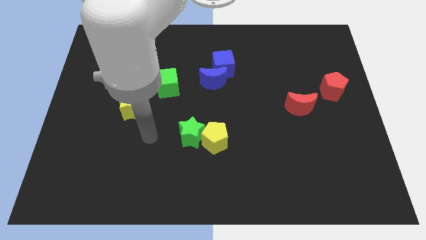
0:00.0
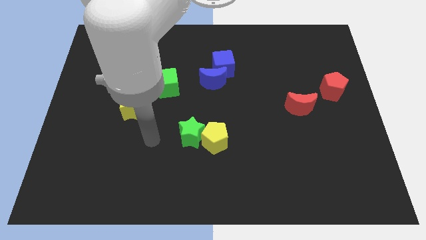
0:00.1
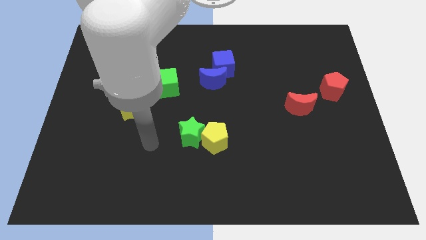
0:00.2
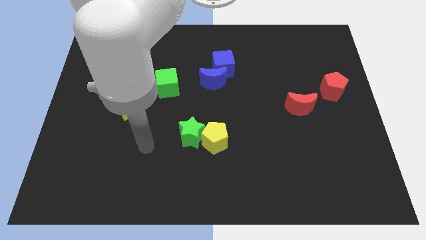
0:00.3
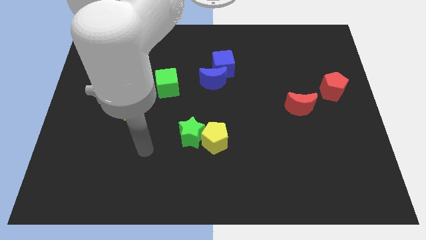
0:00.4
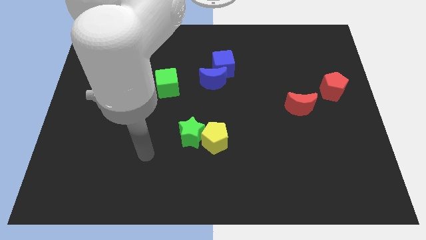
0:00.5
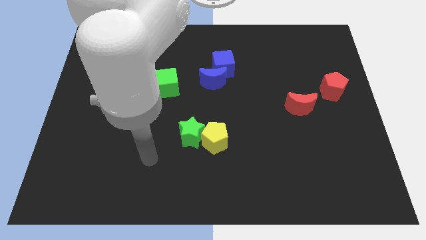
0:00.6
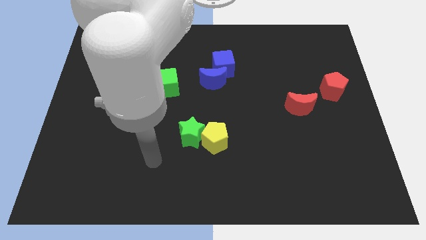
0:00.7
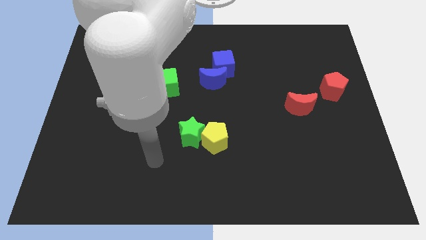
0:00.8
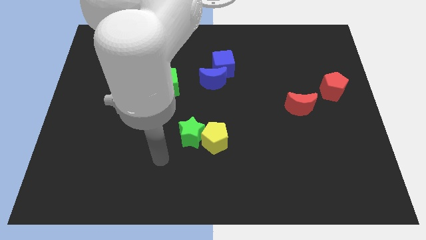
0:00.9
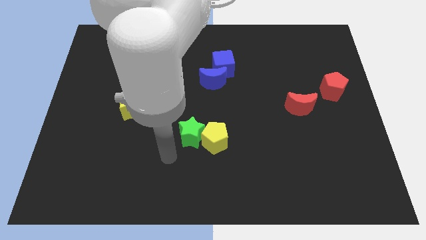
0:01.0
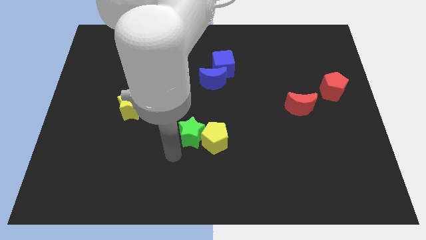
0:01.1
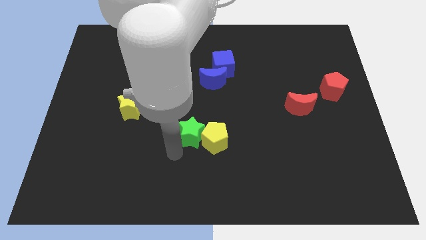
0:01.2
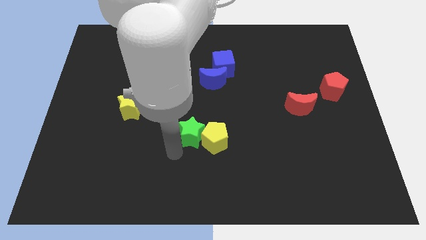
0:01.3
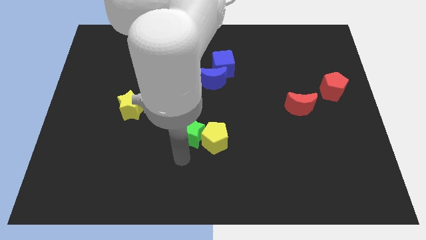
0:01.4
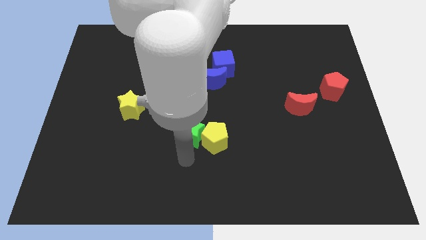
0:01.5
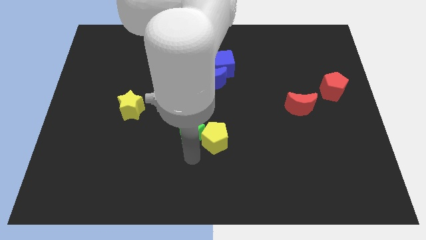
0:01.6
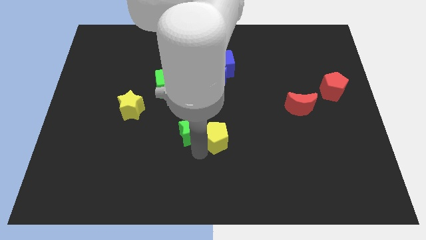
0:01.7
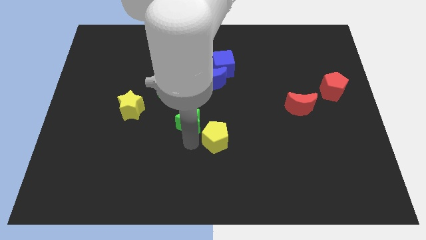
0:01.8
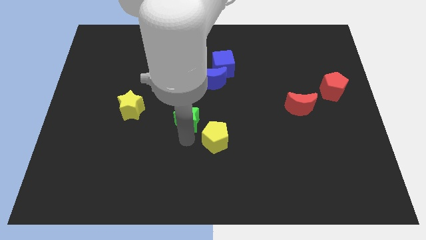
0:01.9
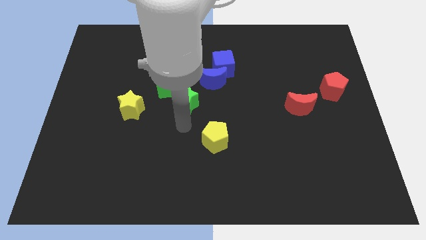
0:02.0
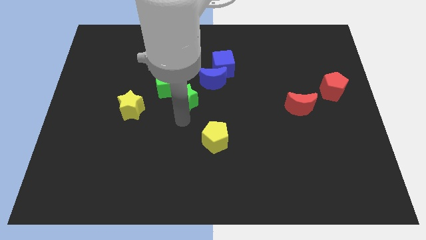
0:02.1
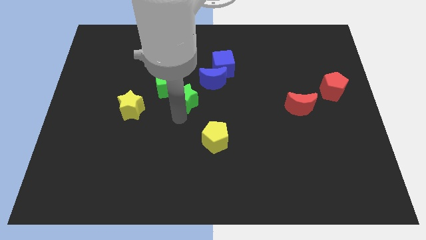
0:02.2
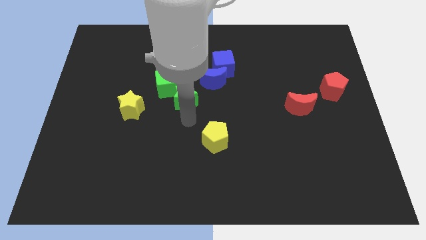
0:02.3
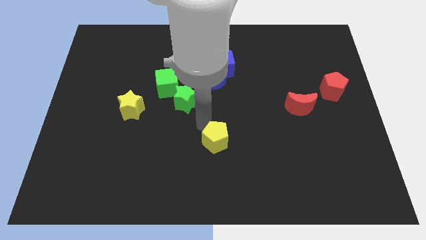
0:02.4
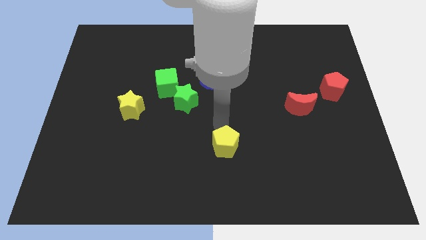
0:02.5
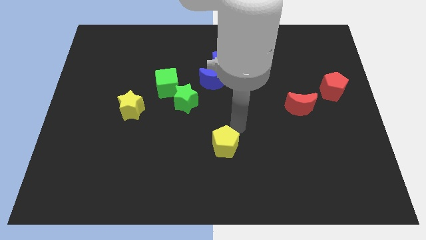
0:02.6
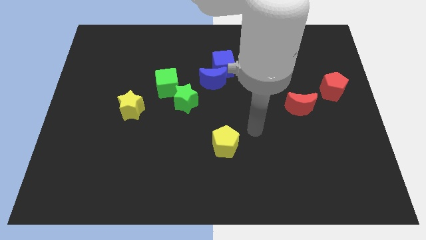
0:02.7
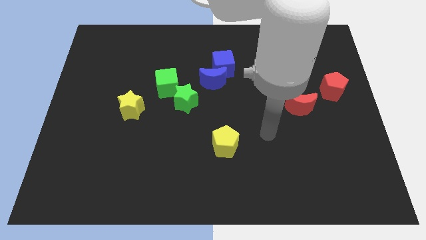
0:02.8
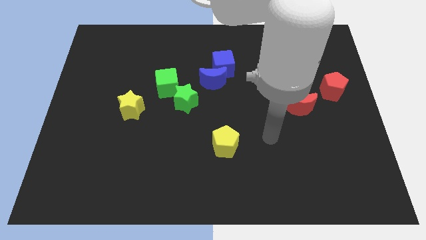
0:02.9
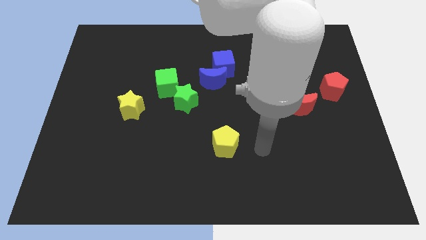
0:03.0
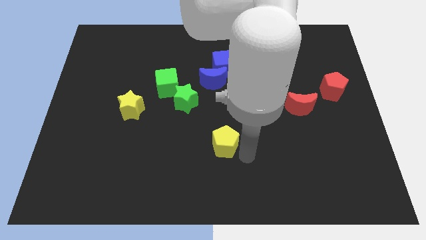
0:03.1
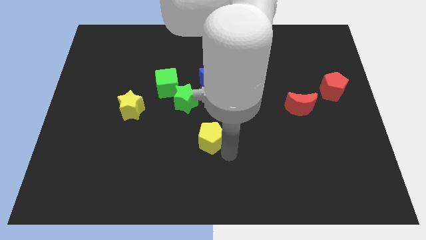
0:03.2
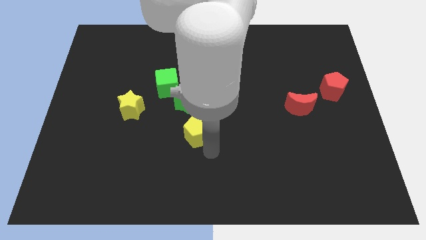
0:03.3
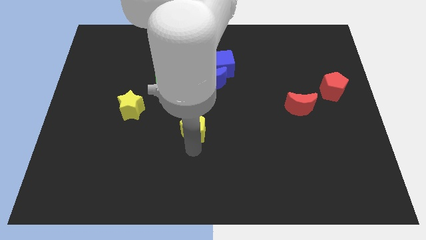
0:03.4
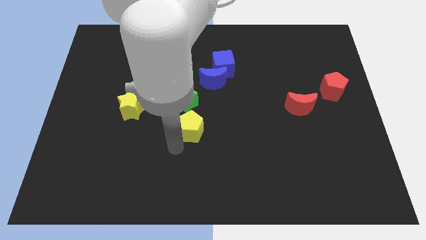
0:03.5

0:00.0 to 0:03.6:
push the green star into the green cube

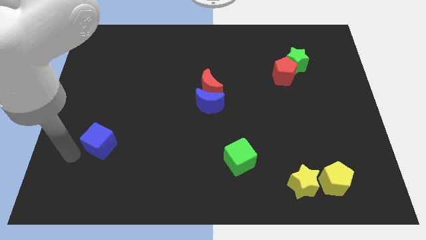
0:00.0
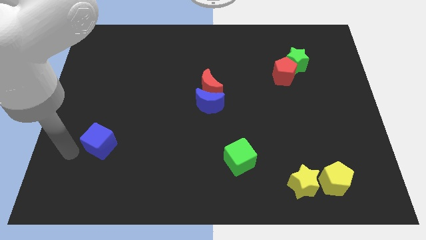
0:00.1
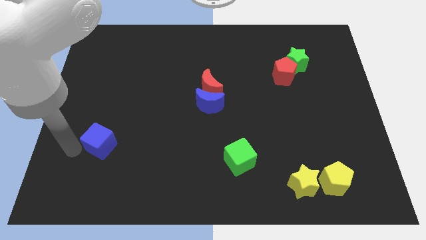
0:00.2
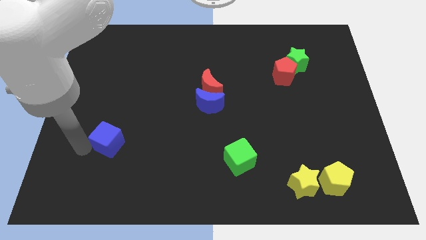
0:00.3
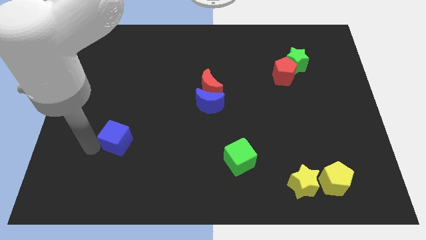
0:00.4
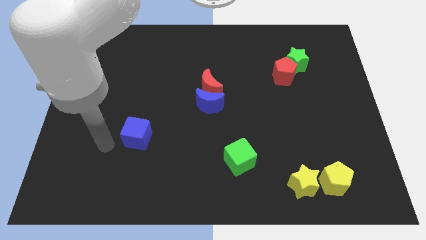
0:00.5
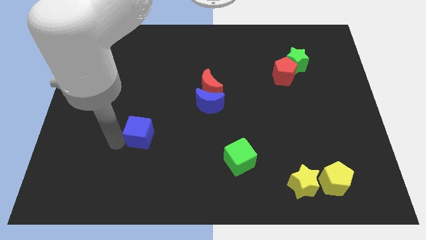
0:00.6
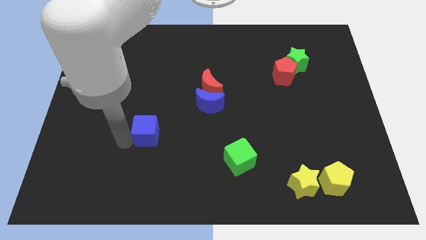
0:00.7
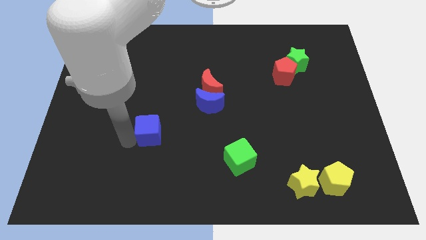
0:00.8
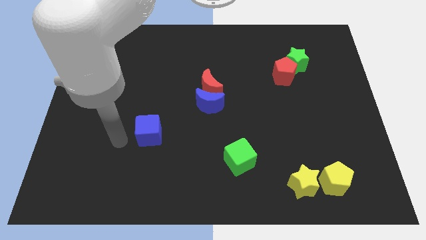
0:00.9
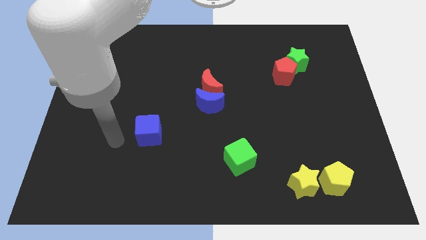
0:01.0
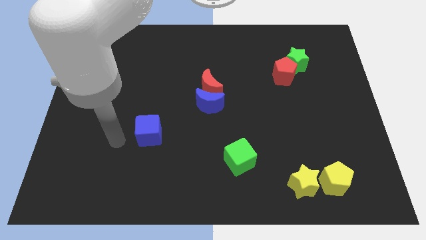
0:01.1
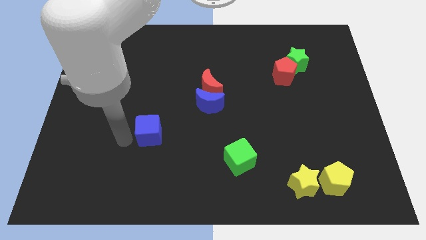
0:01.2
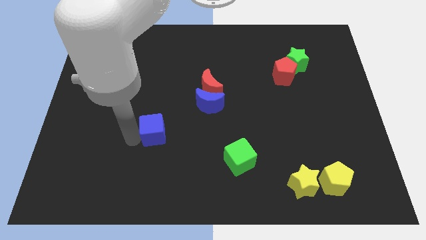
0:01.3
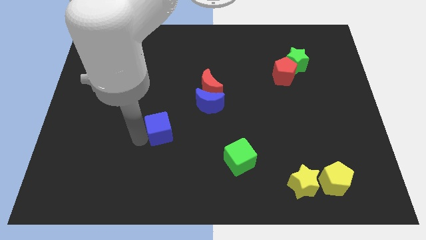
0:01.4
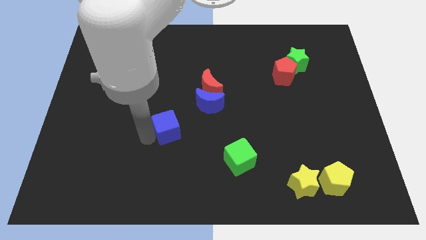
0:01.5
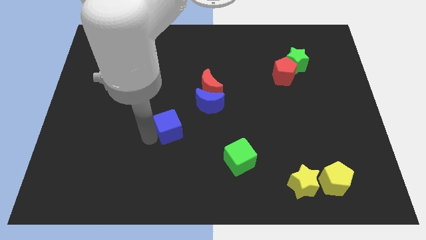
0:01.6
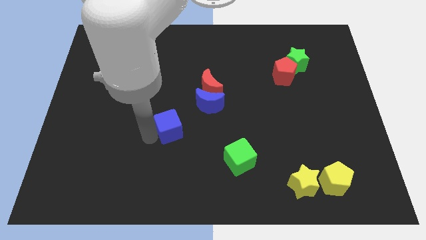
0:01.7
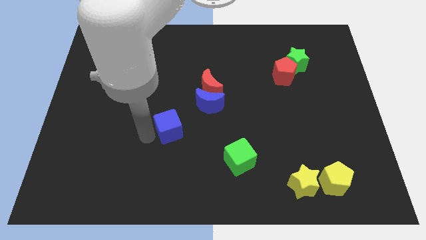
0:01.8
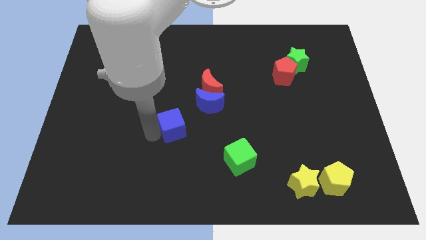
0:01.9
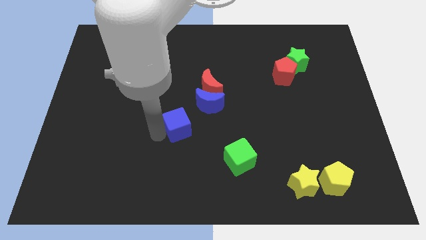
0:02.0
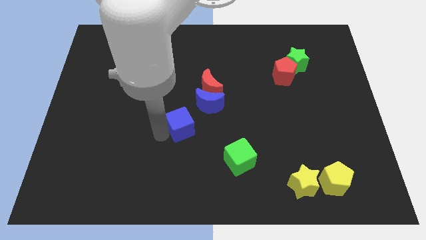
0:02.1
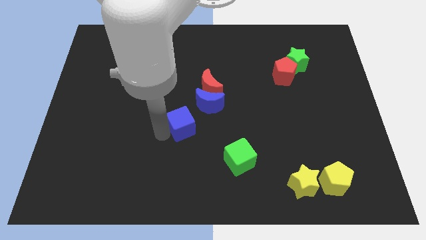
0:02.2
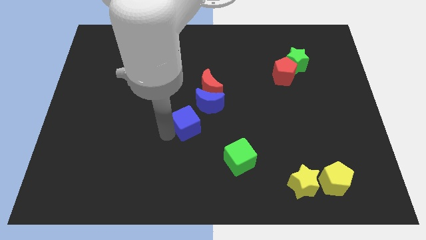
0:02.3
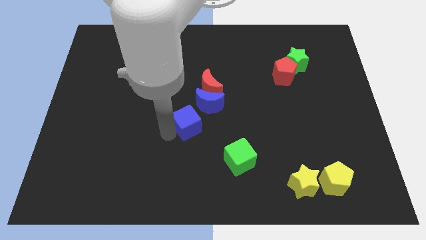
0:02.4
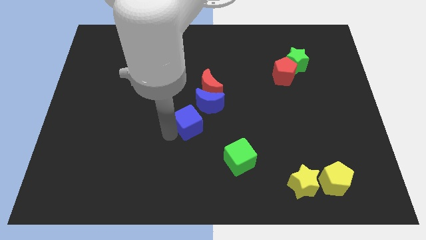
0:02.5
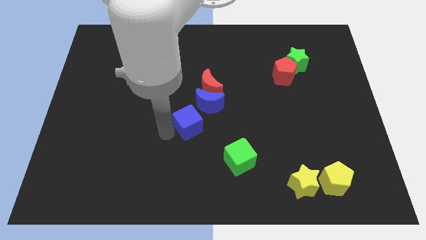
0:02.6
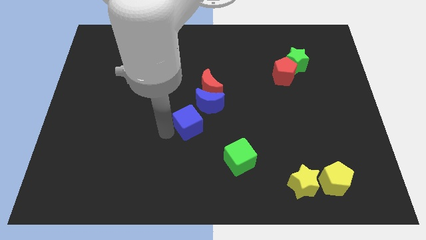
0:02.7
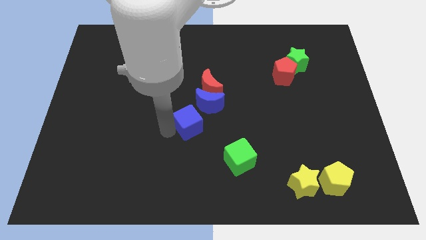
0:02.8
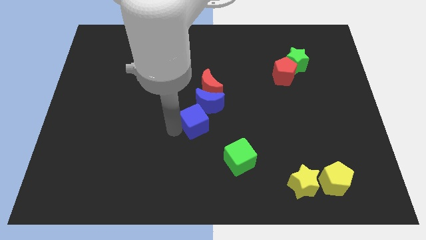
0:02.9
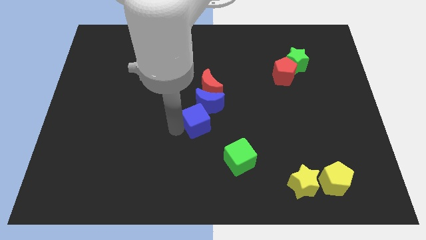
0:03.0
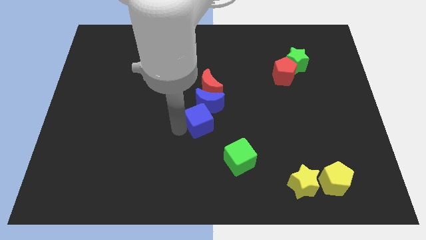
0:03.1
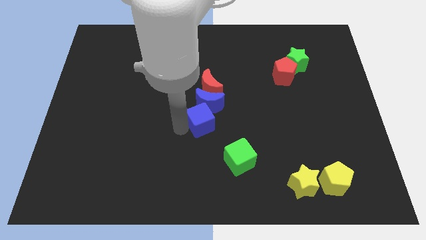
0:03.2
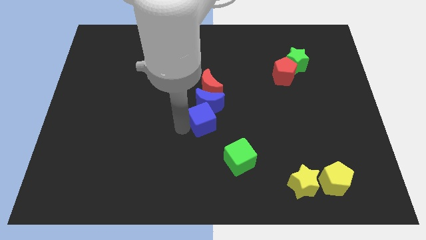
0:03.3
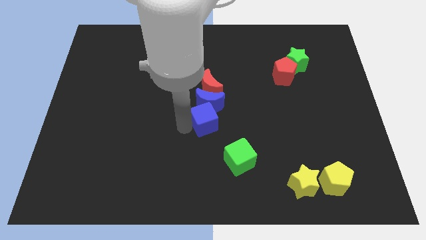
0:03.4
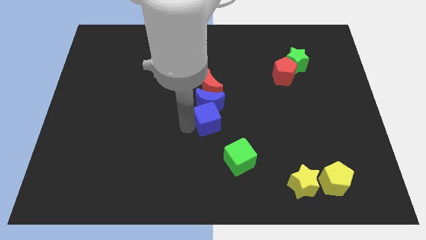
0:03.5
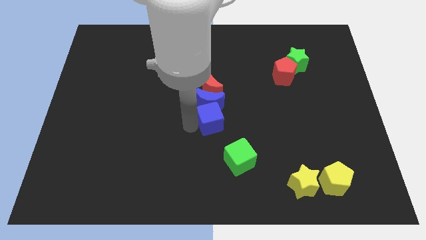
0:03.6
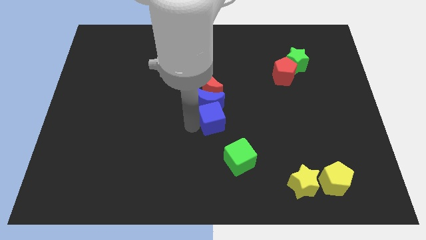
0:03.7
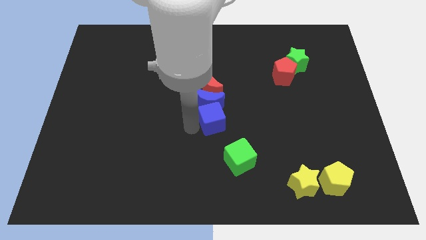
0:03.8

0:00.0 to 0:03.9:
move the blue cube below the blue crescent

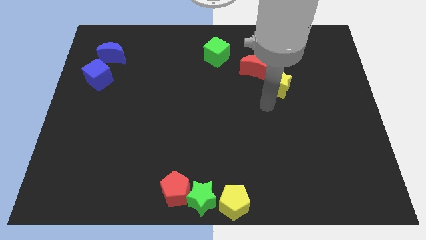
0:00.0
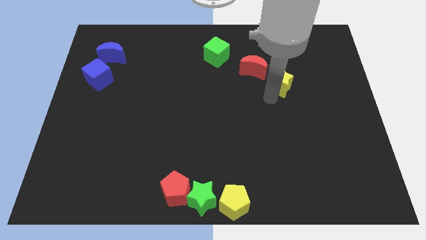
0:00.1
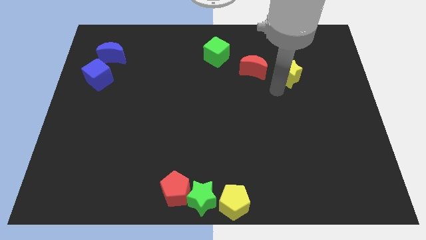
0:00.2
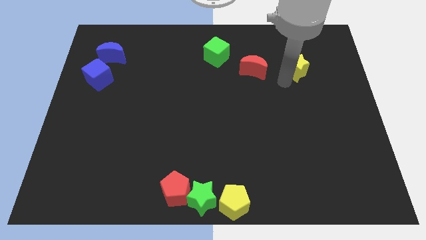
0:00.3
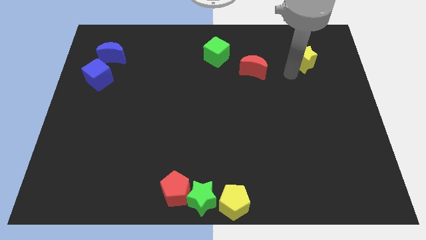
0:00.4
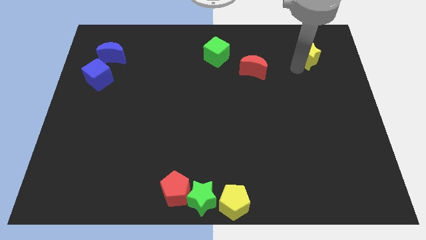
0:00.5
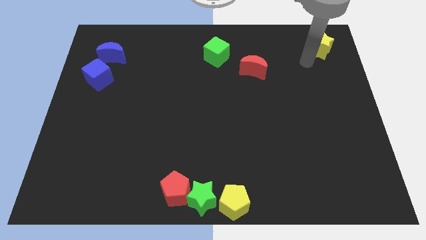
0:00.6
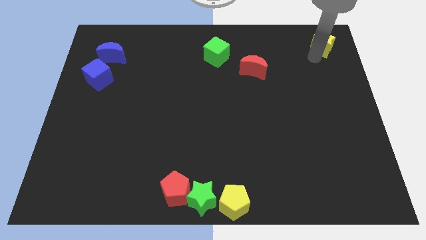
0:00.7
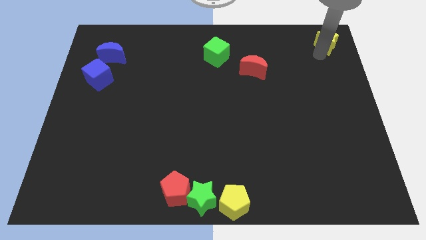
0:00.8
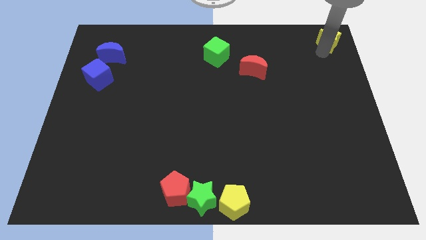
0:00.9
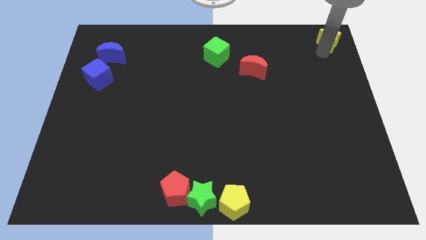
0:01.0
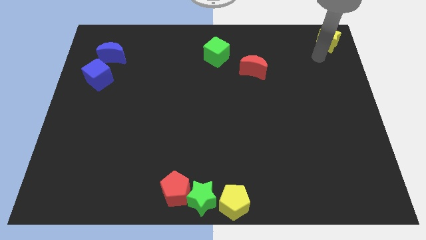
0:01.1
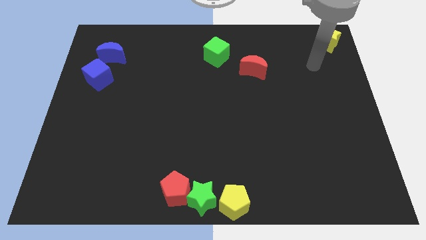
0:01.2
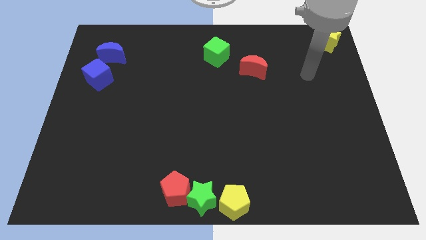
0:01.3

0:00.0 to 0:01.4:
push yellow star to the top right corner of the board

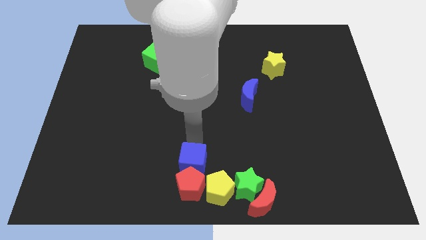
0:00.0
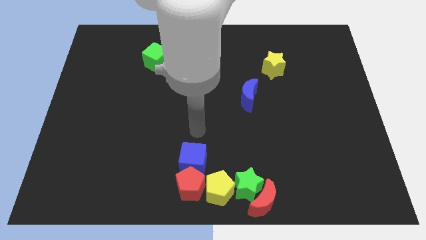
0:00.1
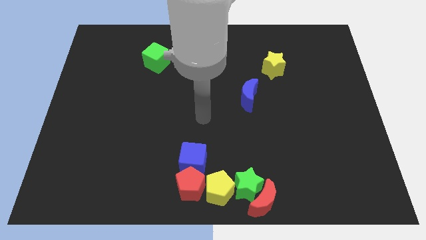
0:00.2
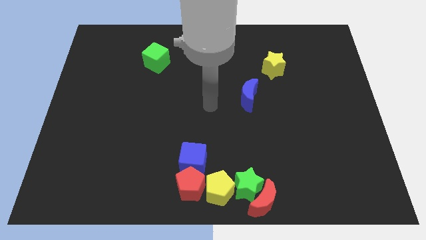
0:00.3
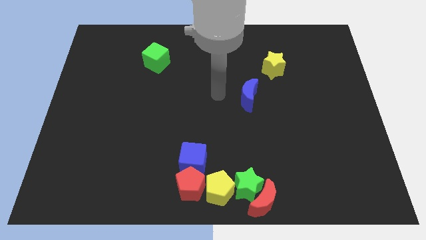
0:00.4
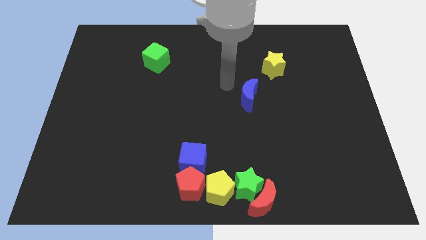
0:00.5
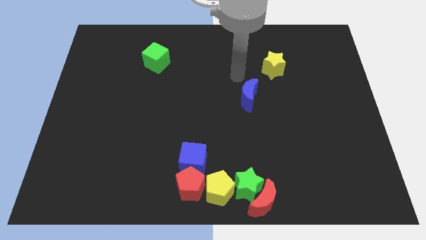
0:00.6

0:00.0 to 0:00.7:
move your arm away from the blue cube
